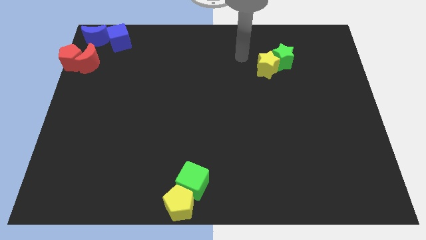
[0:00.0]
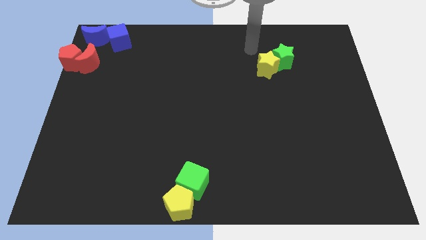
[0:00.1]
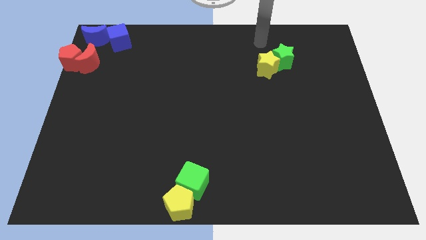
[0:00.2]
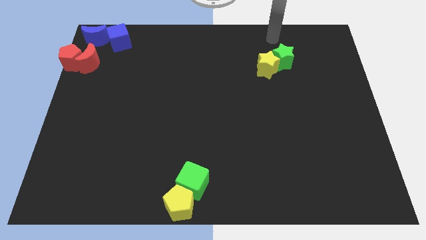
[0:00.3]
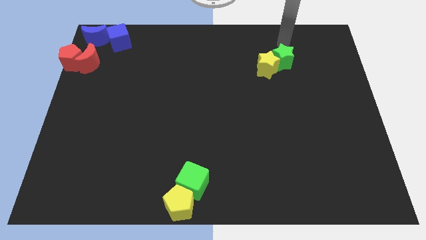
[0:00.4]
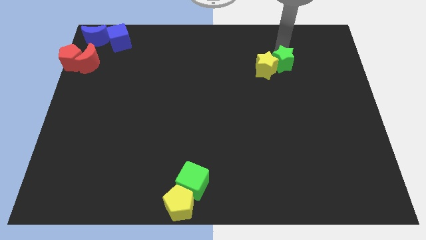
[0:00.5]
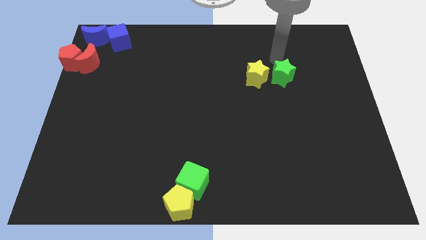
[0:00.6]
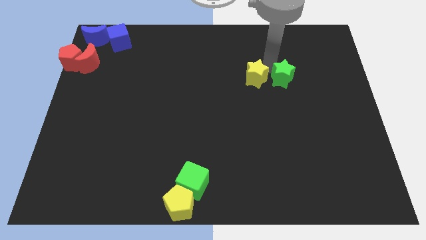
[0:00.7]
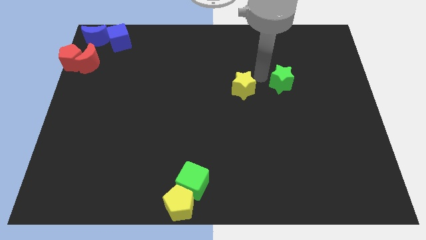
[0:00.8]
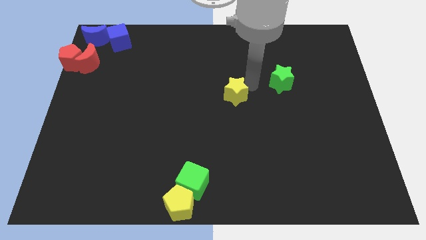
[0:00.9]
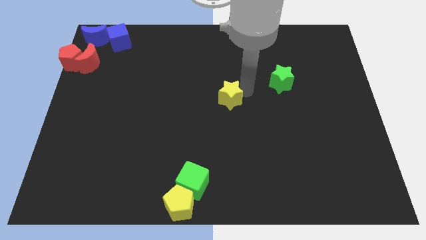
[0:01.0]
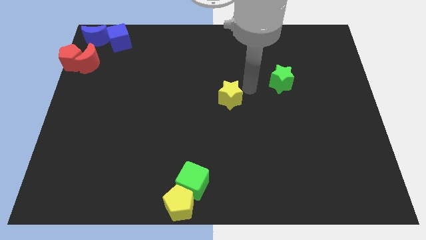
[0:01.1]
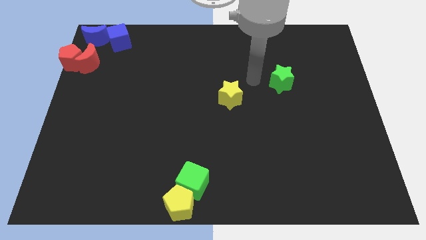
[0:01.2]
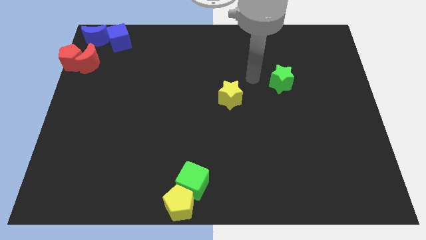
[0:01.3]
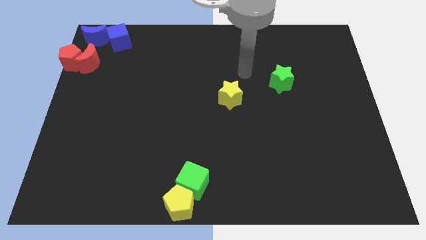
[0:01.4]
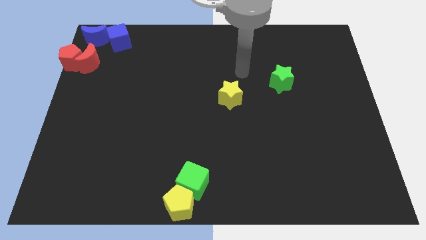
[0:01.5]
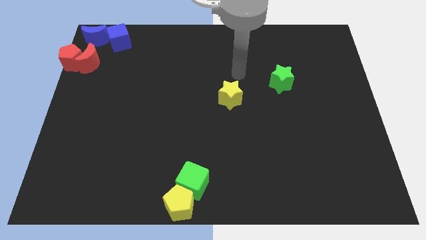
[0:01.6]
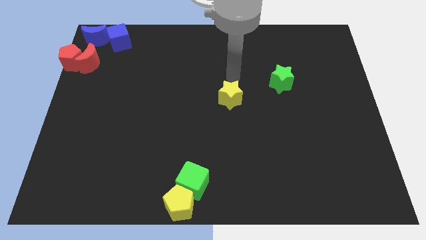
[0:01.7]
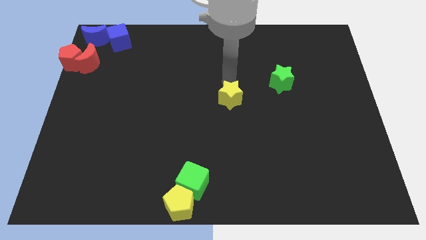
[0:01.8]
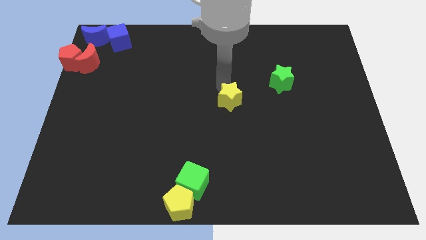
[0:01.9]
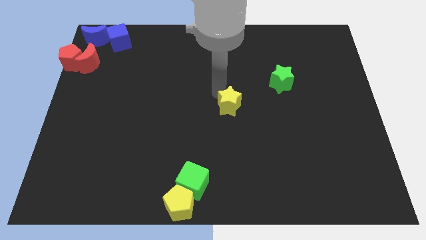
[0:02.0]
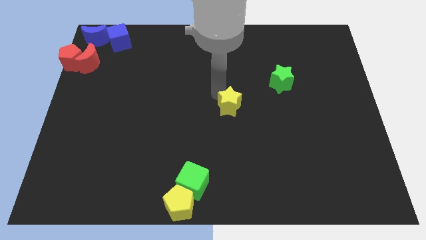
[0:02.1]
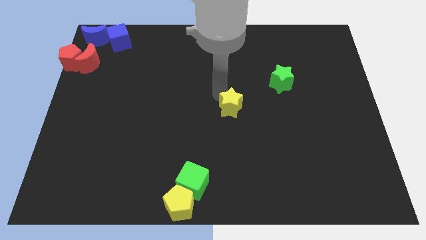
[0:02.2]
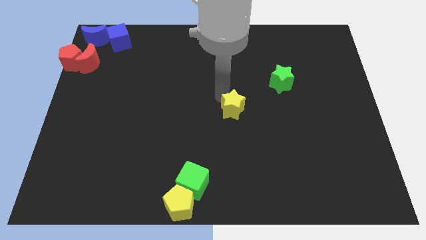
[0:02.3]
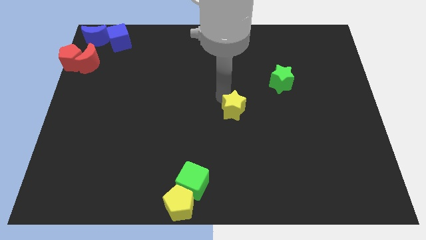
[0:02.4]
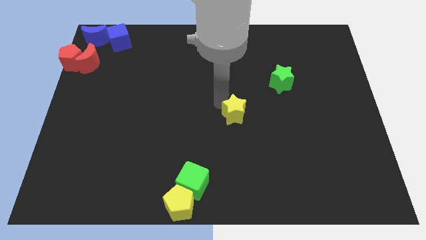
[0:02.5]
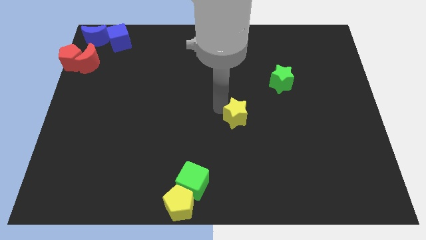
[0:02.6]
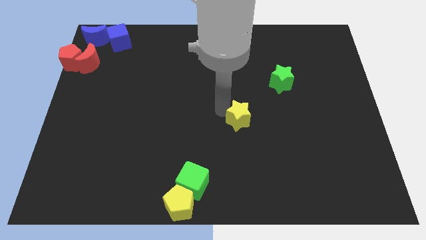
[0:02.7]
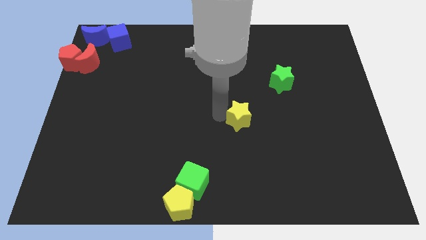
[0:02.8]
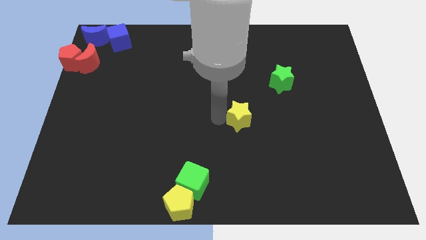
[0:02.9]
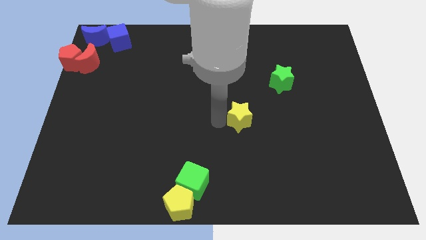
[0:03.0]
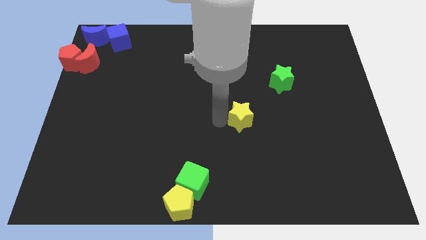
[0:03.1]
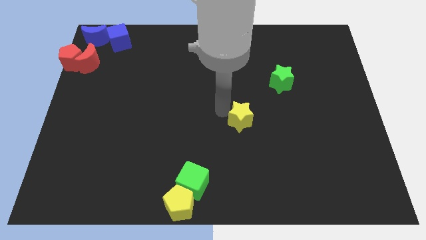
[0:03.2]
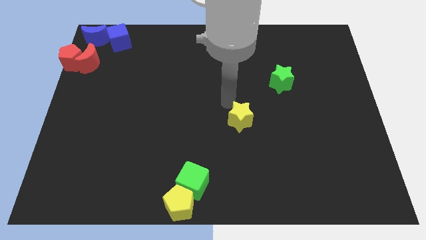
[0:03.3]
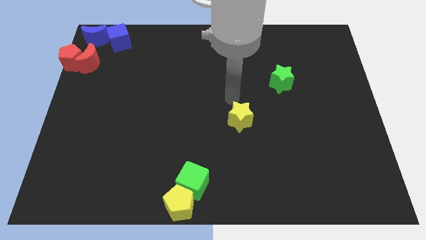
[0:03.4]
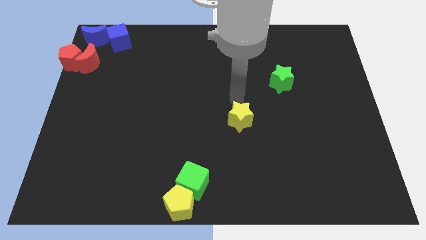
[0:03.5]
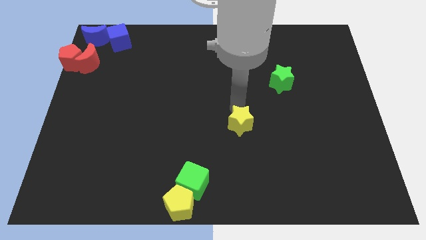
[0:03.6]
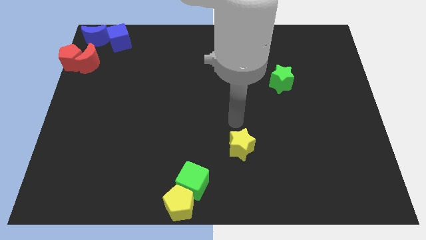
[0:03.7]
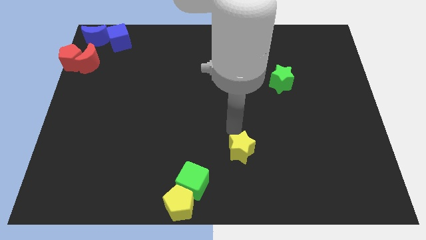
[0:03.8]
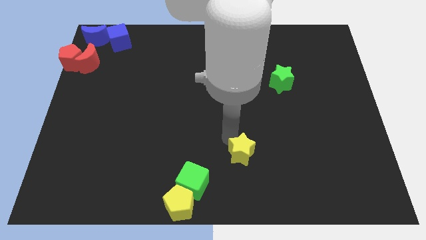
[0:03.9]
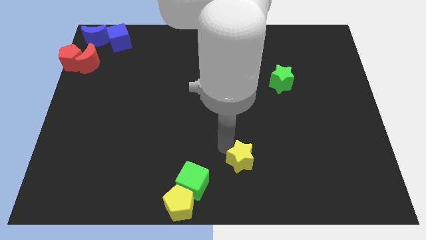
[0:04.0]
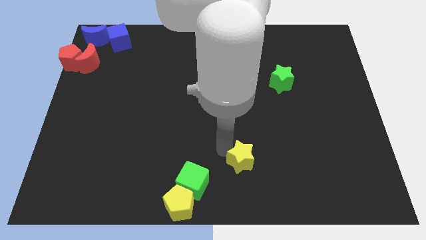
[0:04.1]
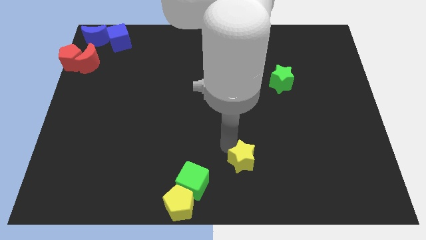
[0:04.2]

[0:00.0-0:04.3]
separate yellow star from green star

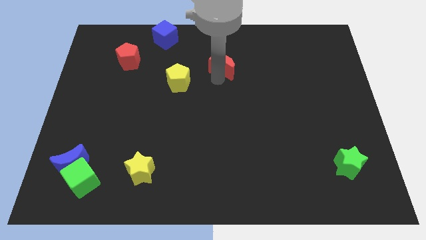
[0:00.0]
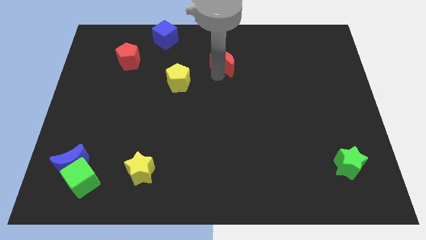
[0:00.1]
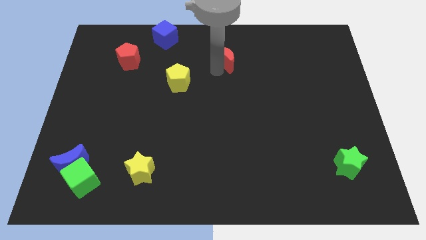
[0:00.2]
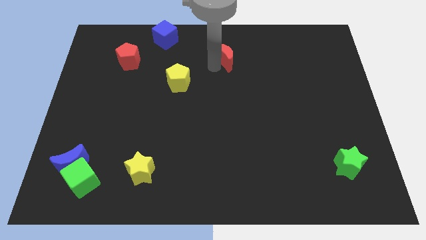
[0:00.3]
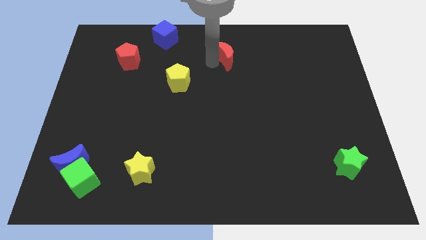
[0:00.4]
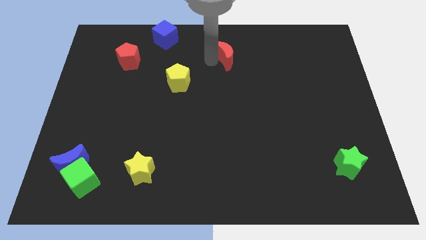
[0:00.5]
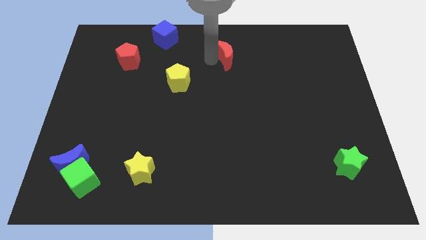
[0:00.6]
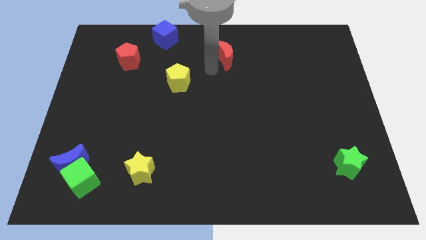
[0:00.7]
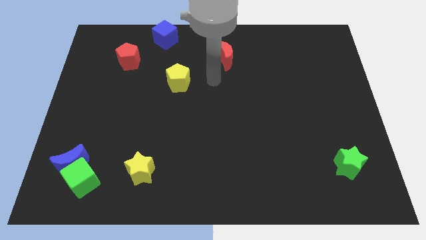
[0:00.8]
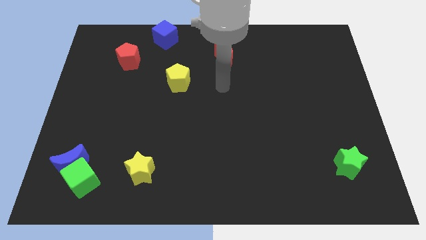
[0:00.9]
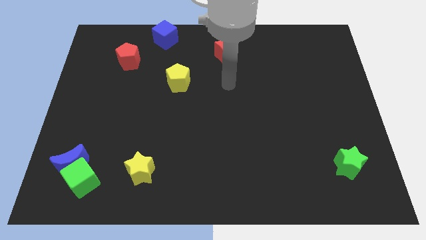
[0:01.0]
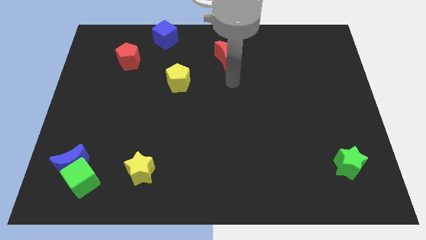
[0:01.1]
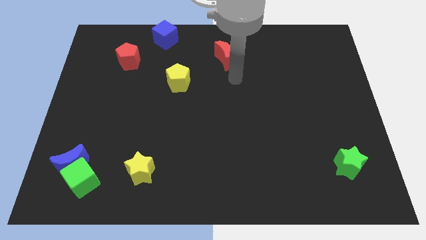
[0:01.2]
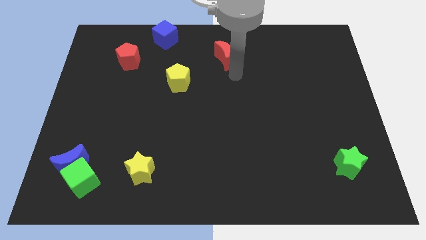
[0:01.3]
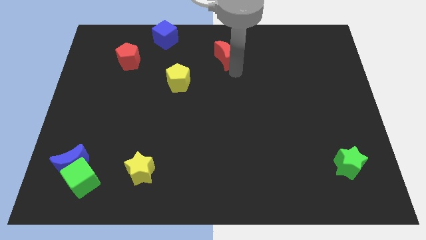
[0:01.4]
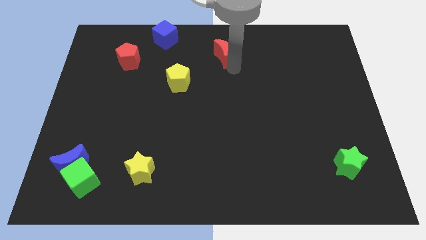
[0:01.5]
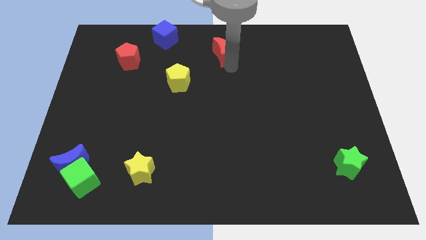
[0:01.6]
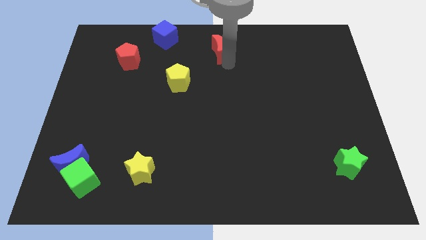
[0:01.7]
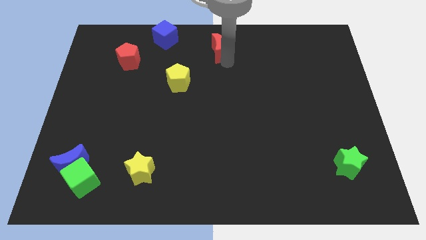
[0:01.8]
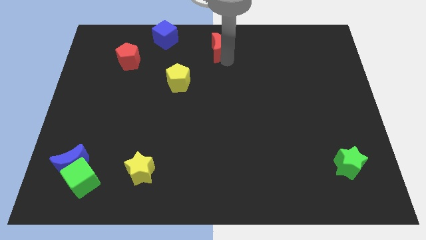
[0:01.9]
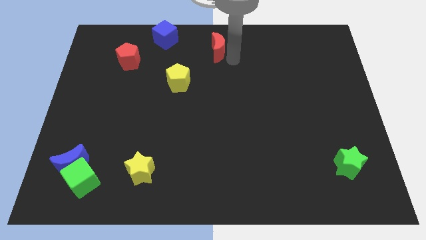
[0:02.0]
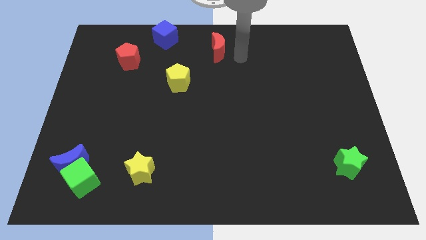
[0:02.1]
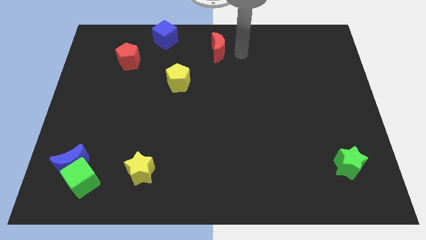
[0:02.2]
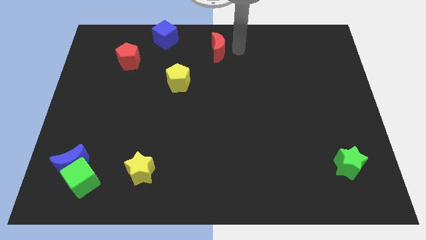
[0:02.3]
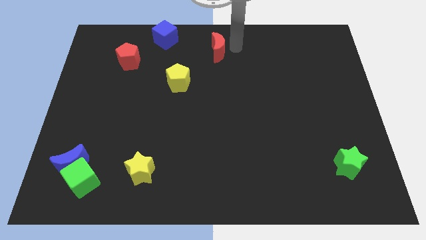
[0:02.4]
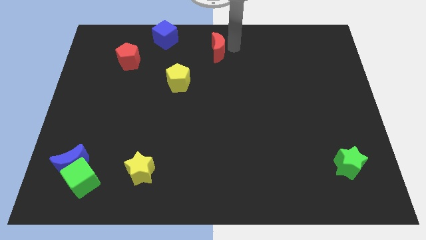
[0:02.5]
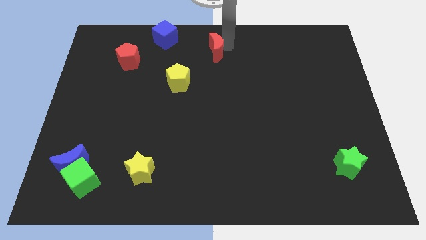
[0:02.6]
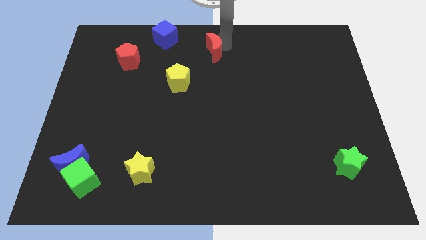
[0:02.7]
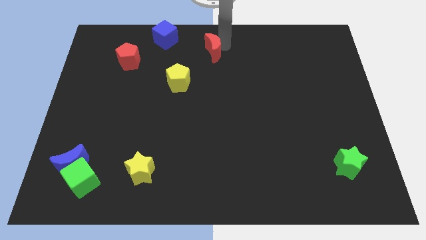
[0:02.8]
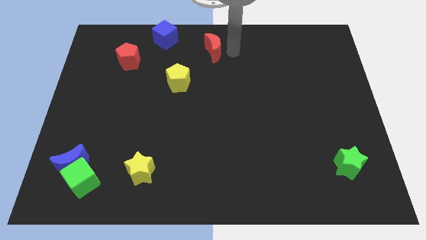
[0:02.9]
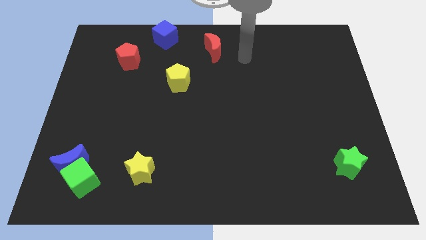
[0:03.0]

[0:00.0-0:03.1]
push the red crescent to the top center of board

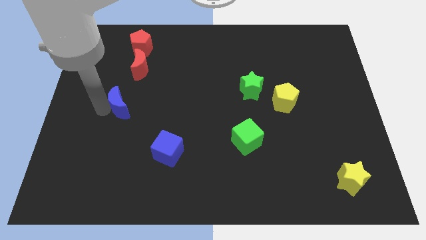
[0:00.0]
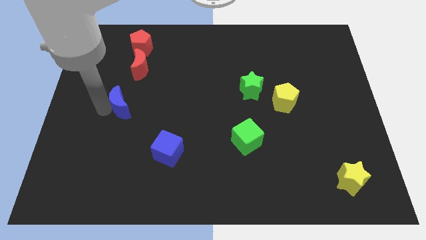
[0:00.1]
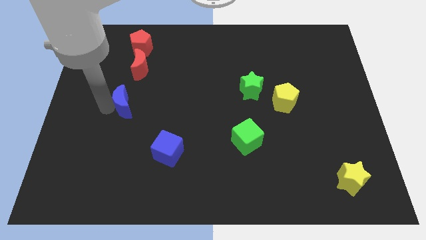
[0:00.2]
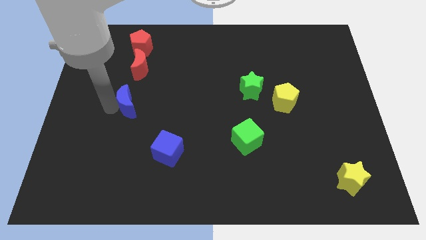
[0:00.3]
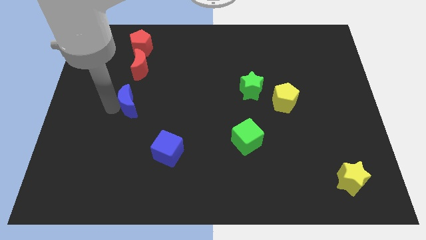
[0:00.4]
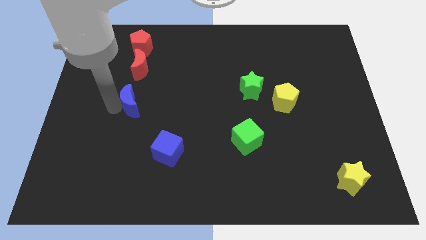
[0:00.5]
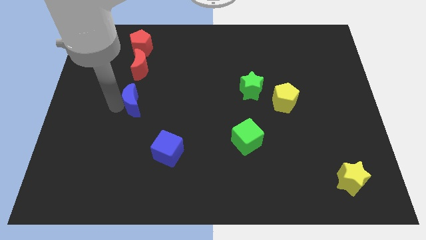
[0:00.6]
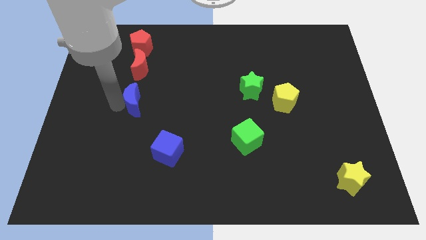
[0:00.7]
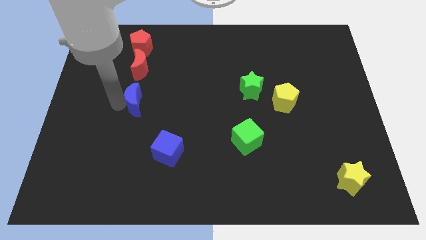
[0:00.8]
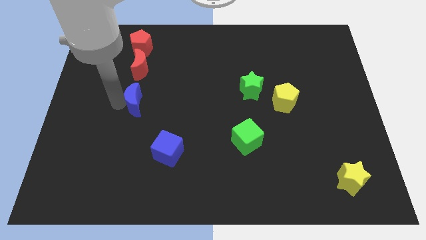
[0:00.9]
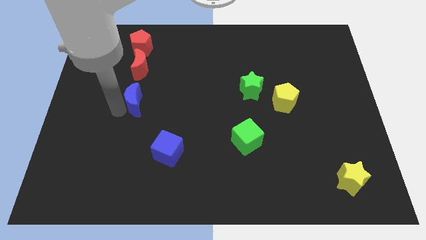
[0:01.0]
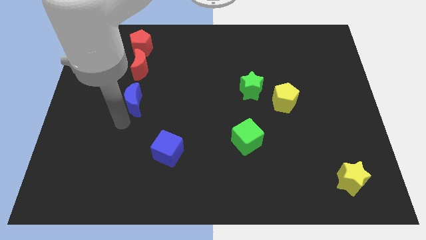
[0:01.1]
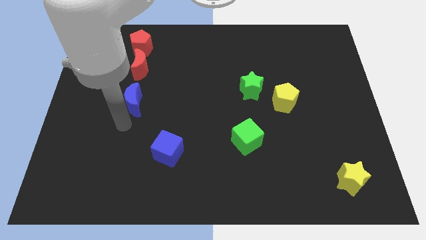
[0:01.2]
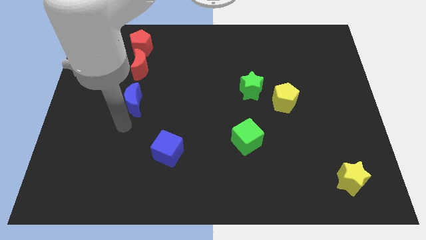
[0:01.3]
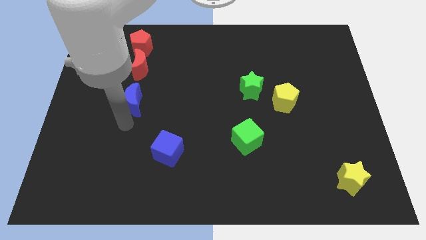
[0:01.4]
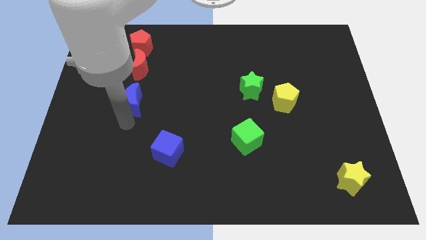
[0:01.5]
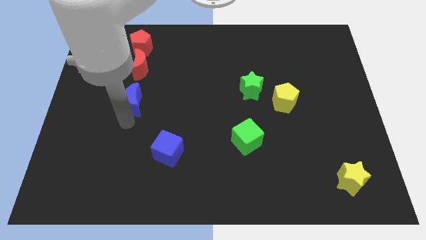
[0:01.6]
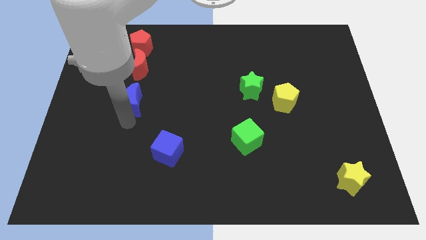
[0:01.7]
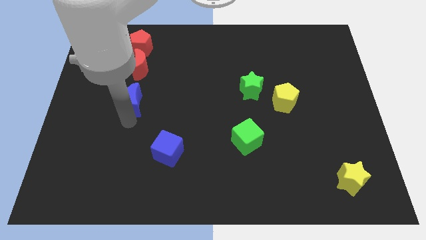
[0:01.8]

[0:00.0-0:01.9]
place blue moon below red moon
